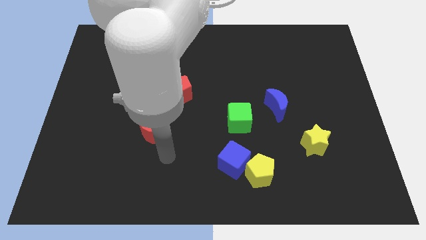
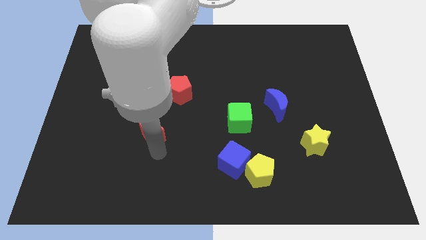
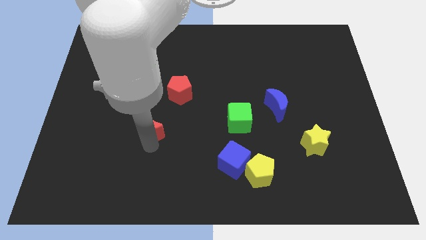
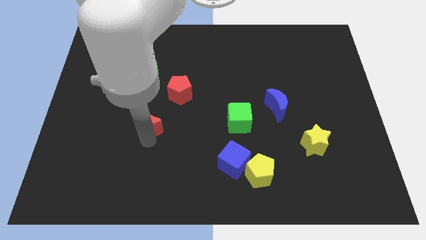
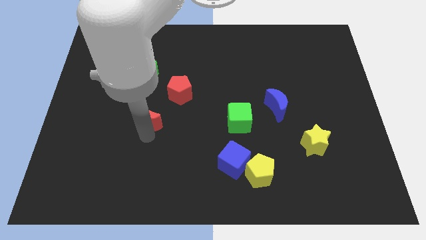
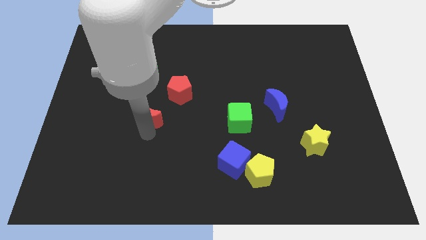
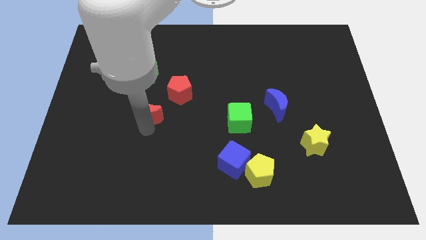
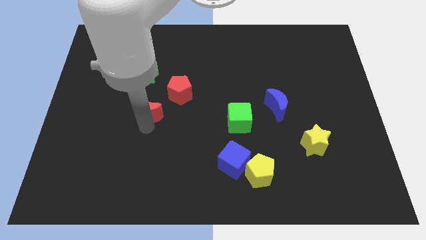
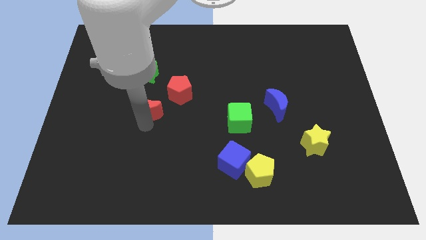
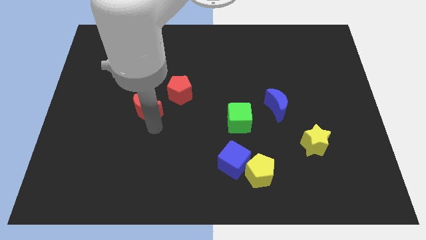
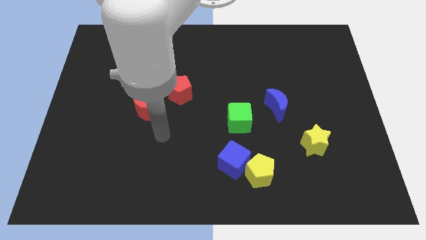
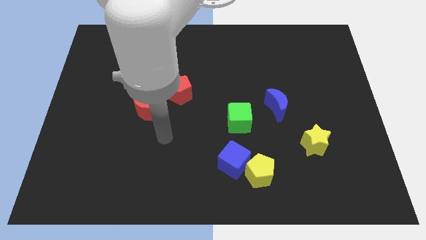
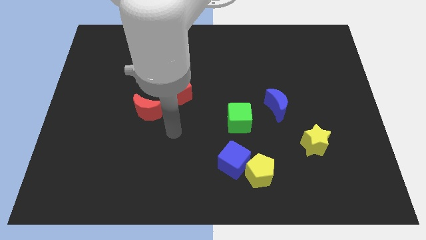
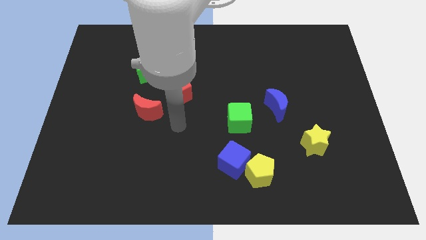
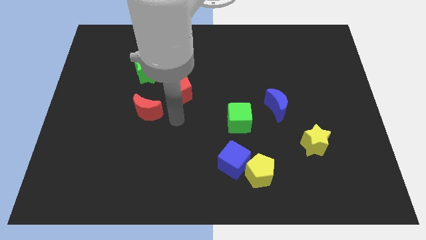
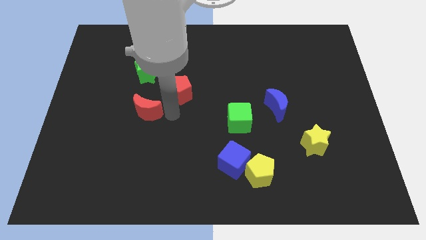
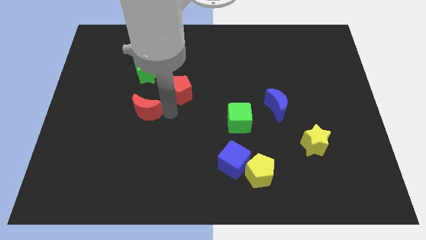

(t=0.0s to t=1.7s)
push the red crescent slightly to the top

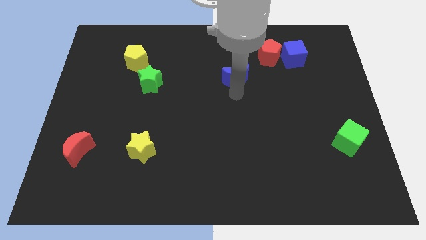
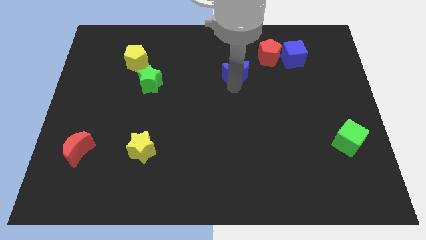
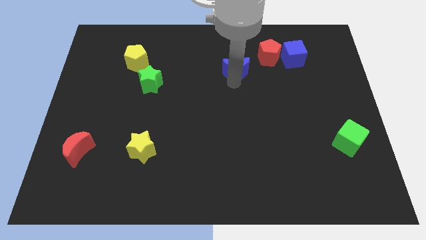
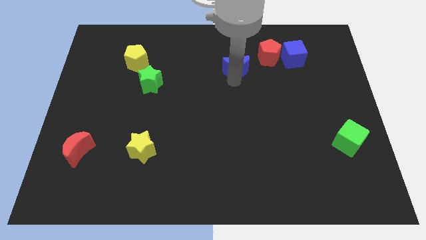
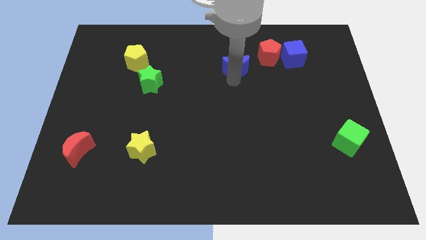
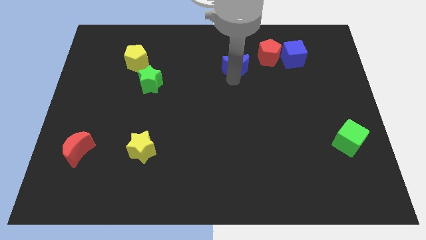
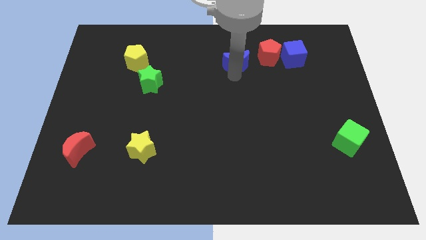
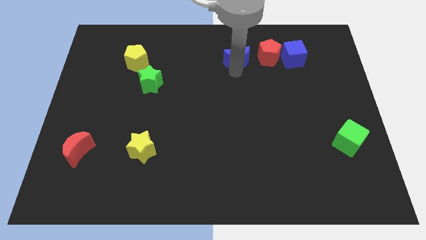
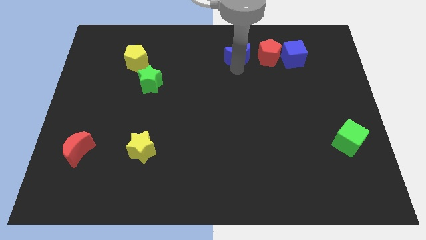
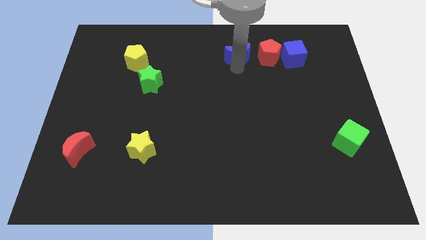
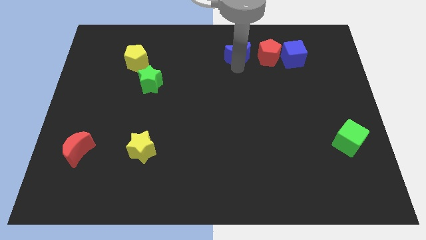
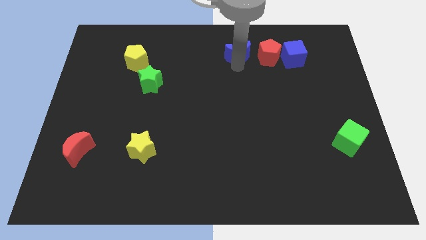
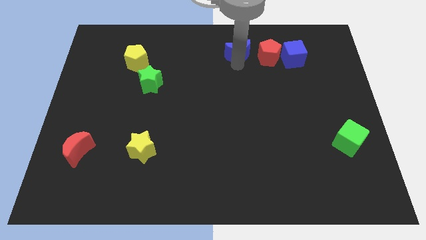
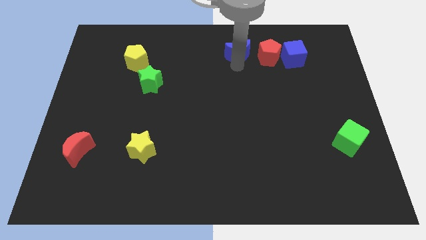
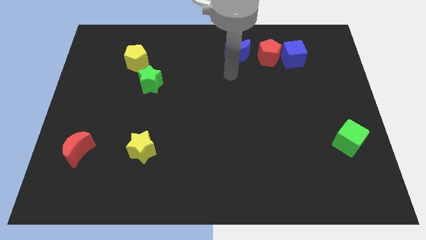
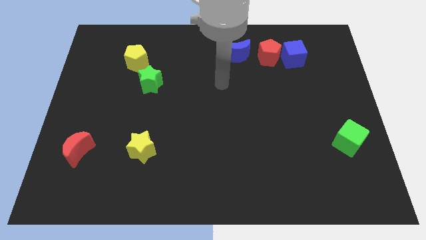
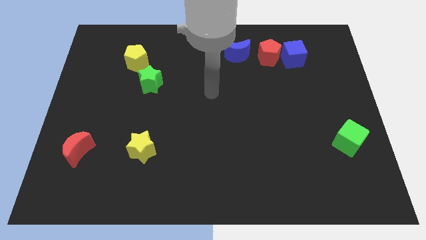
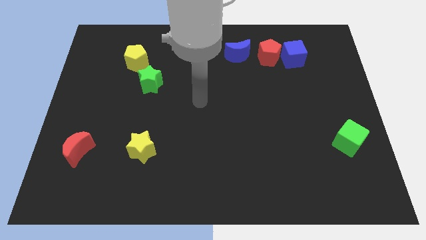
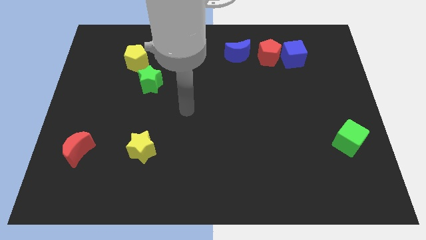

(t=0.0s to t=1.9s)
place the blue crescent at left side of the red pentagon

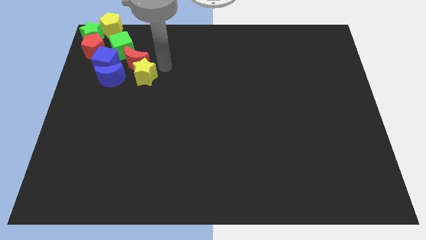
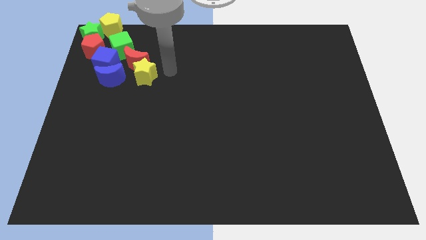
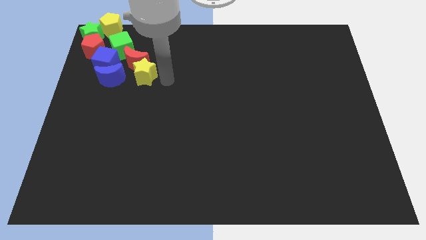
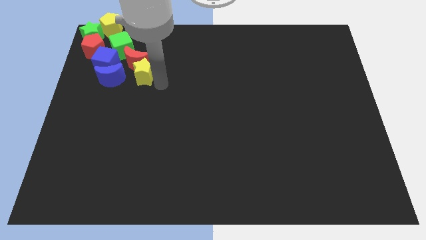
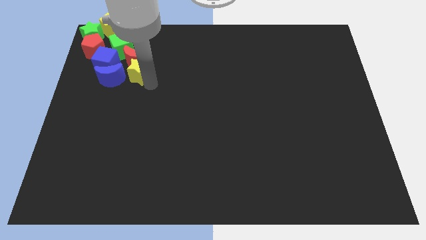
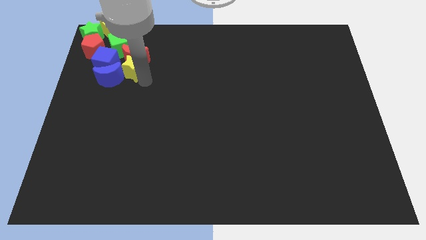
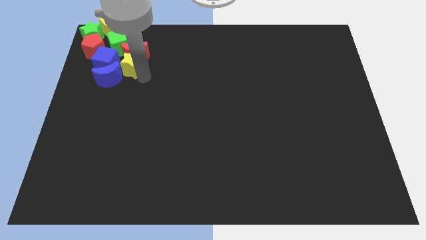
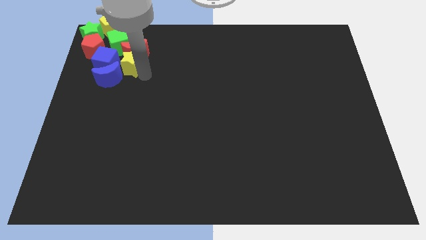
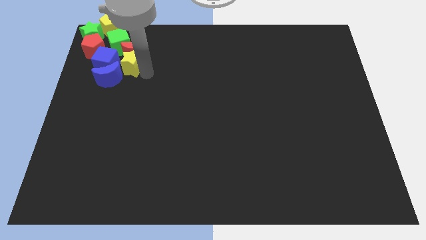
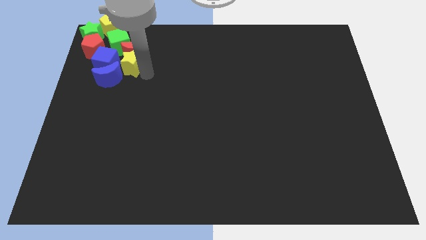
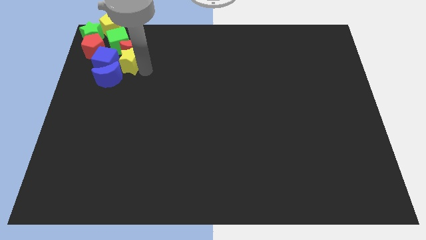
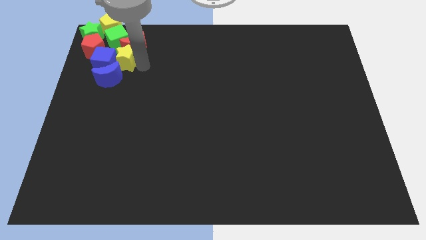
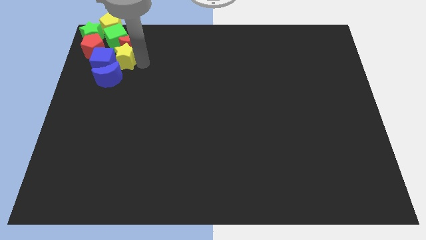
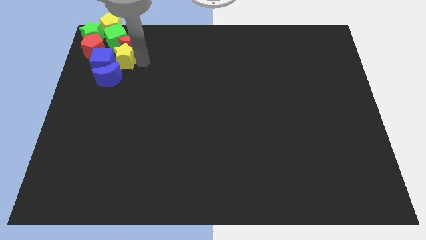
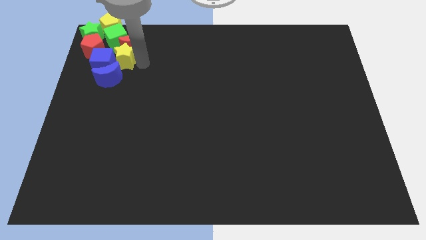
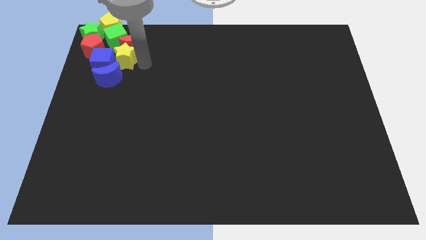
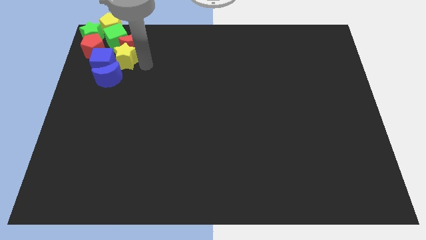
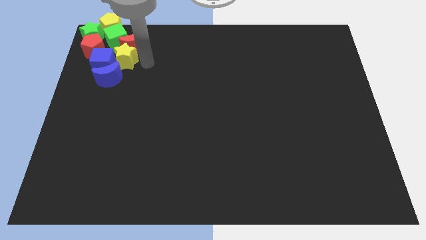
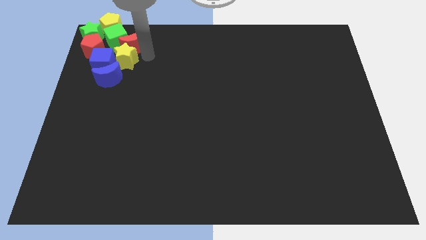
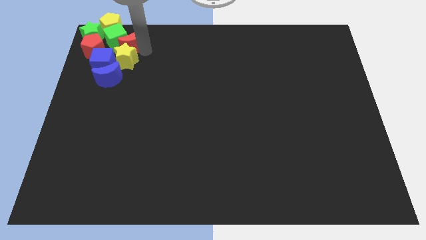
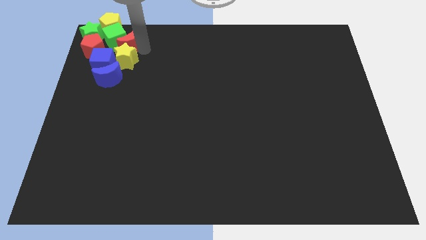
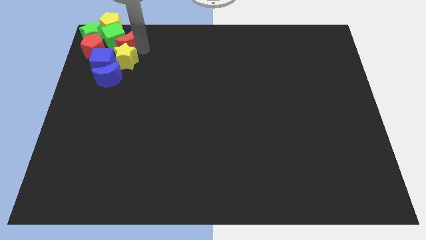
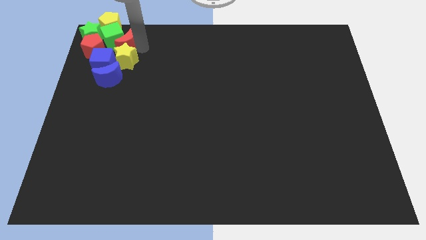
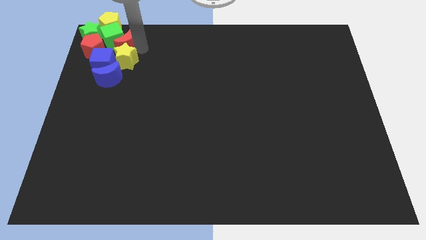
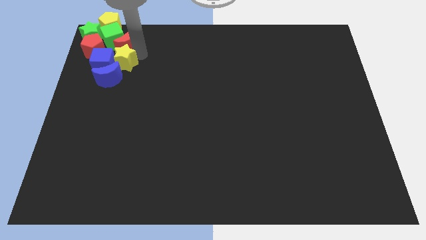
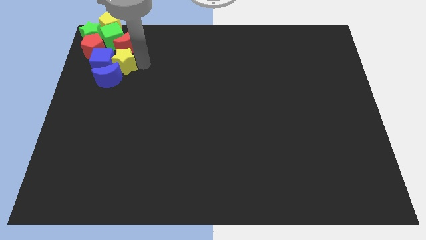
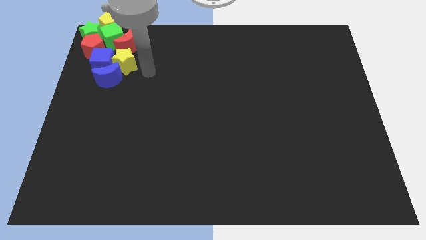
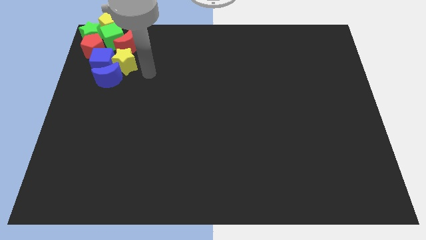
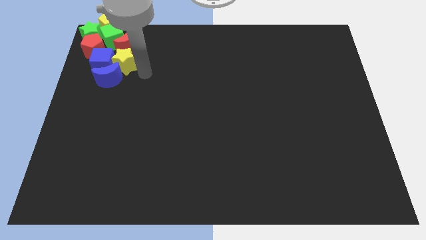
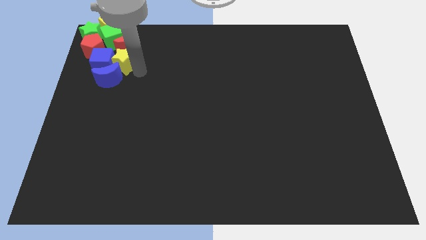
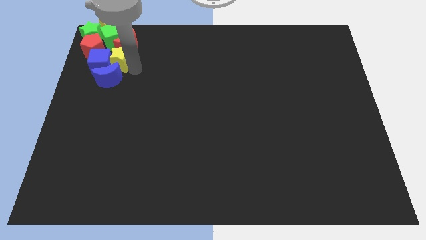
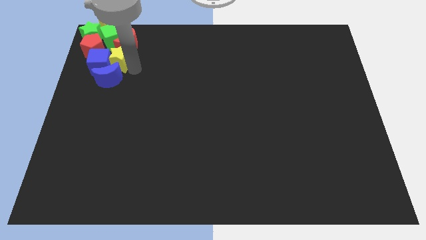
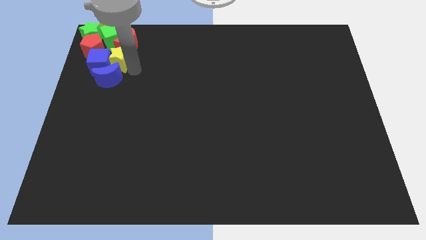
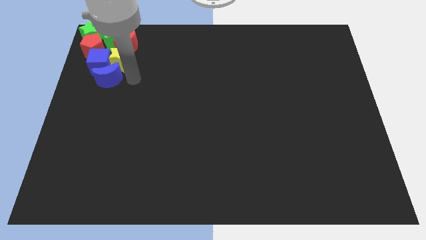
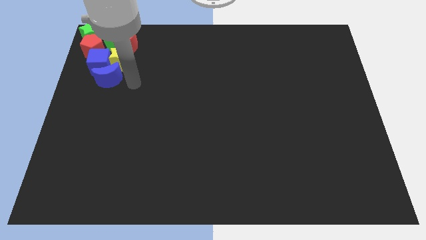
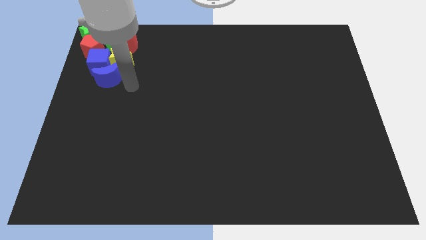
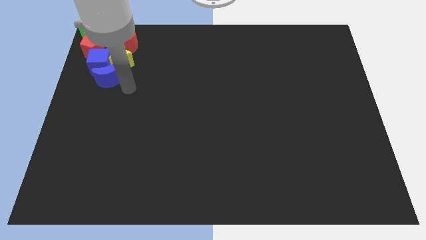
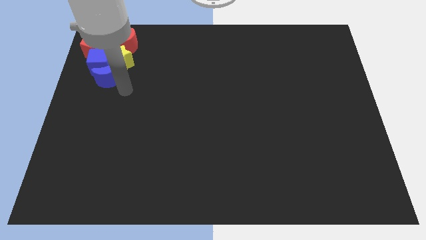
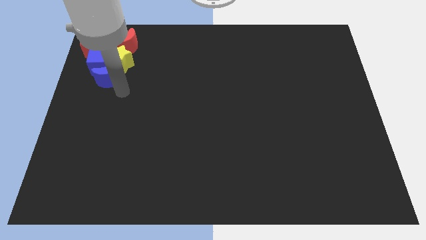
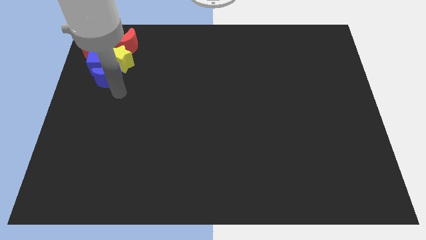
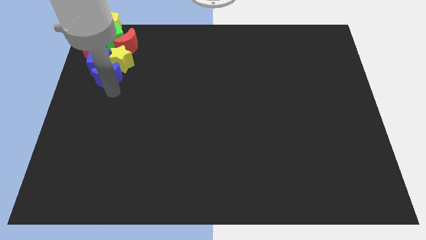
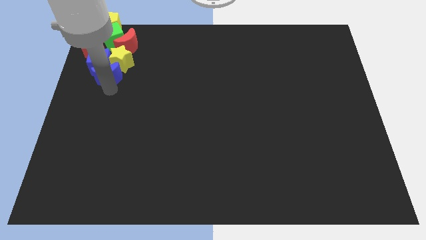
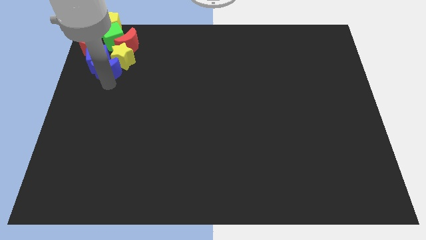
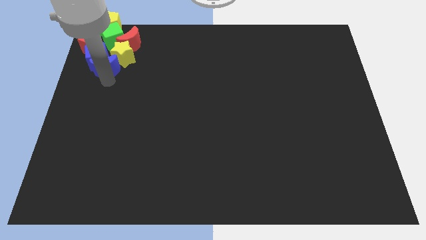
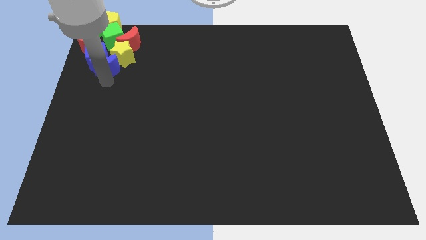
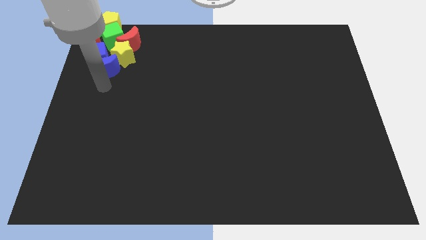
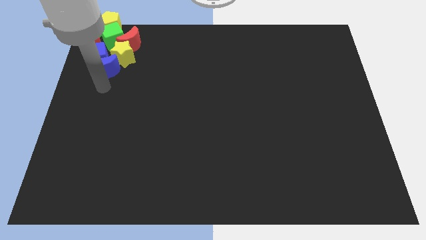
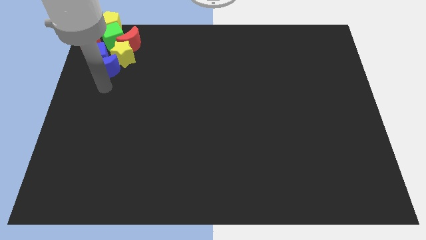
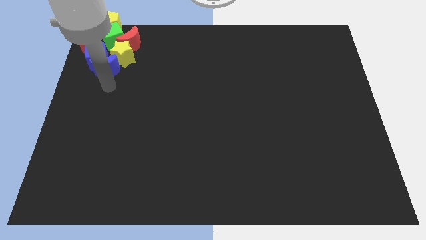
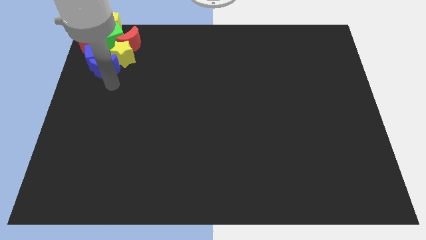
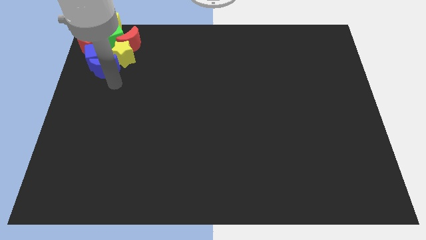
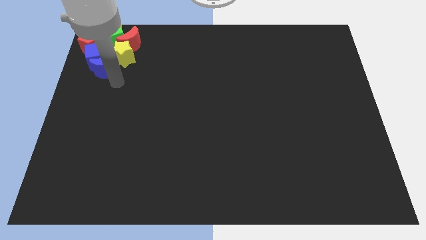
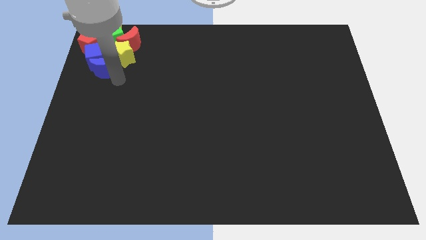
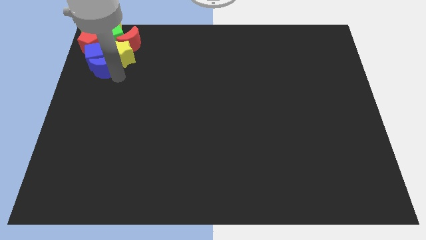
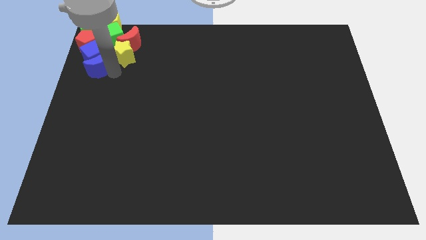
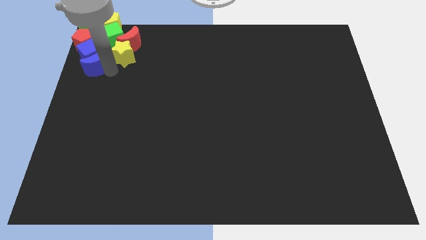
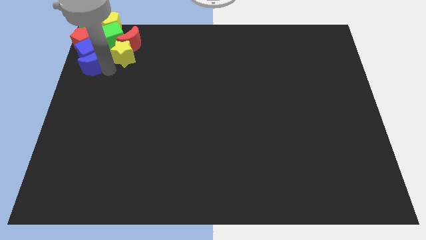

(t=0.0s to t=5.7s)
move the group of blocks at the top left of the board
